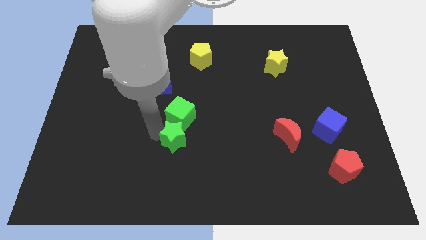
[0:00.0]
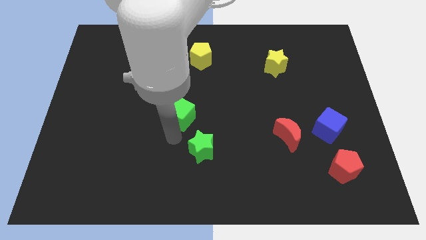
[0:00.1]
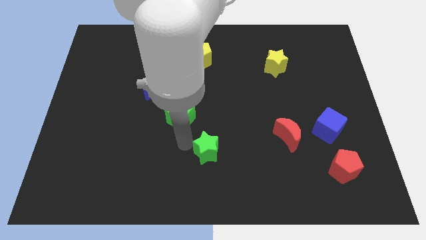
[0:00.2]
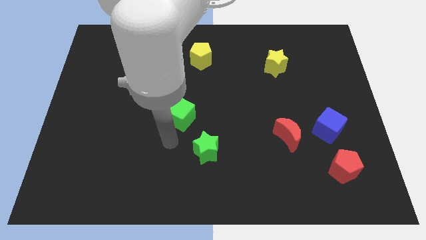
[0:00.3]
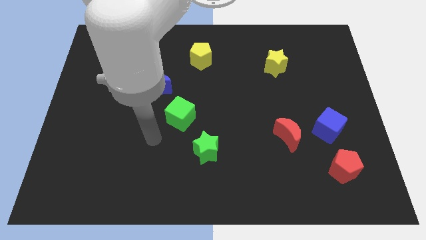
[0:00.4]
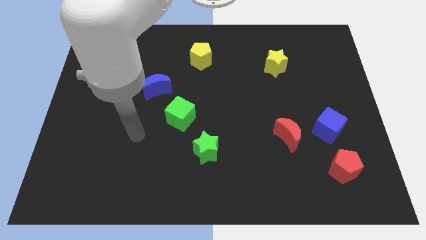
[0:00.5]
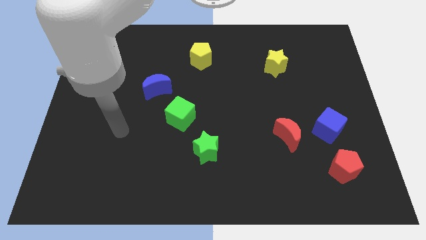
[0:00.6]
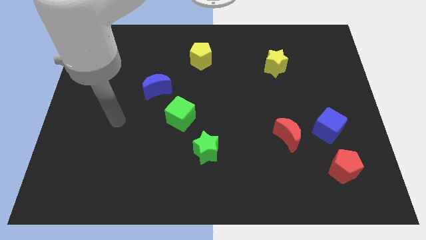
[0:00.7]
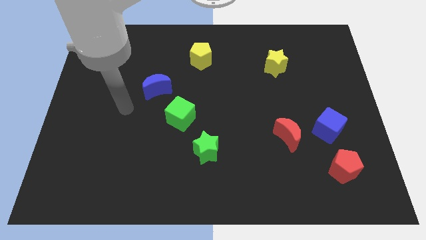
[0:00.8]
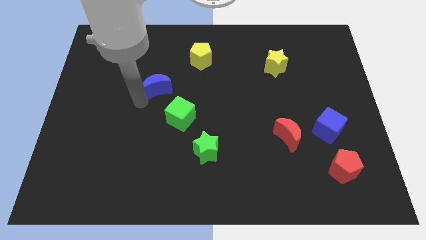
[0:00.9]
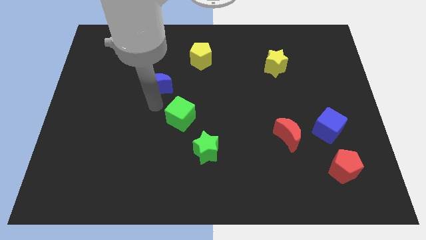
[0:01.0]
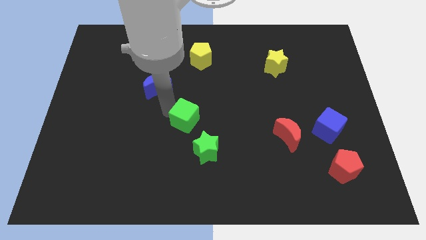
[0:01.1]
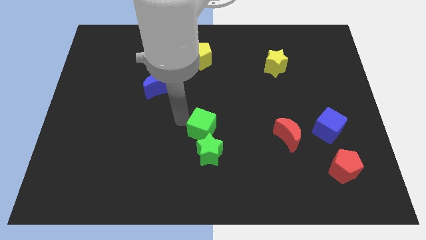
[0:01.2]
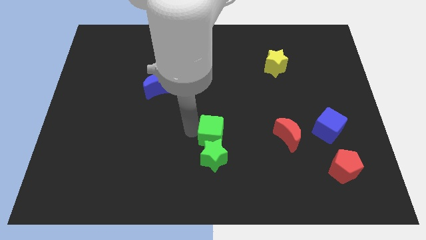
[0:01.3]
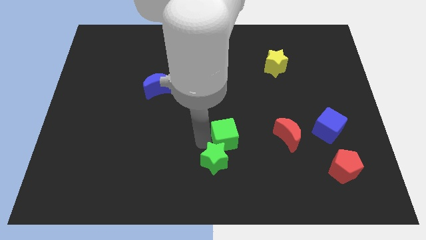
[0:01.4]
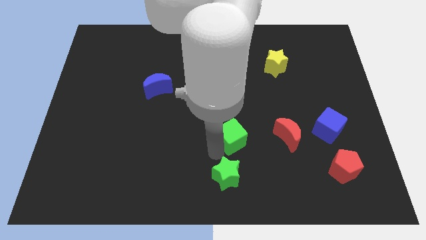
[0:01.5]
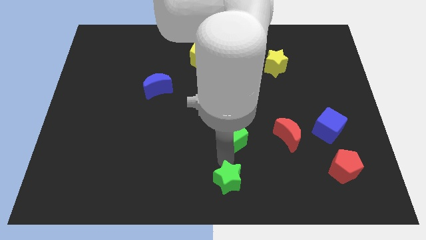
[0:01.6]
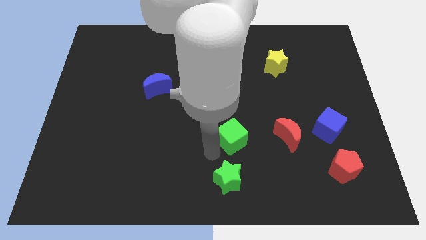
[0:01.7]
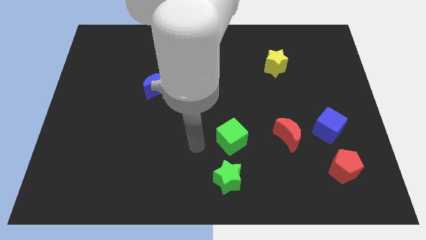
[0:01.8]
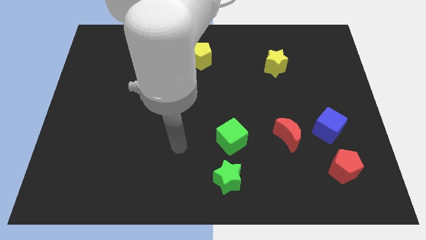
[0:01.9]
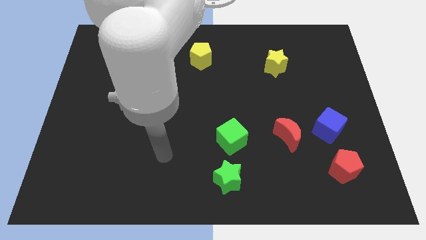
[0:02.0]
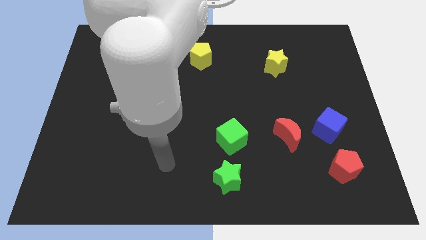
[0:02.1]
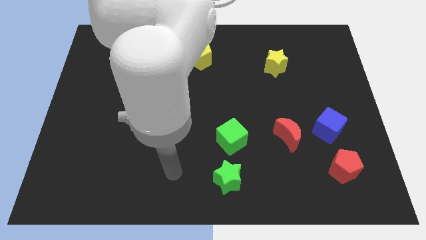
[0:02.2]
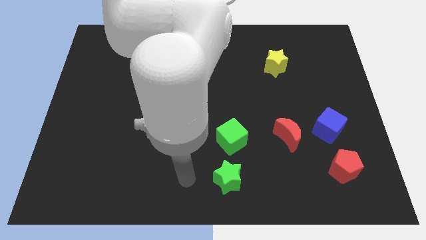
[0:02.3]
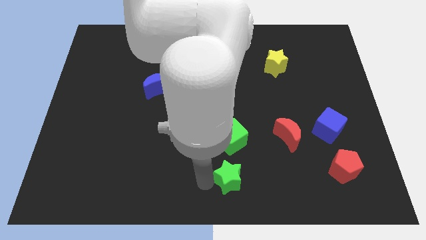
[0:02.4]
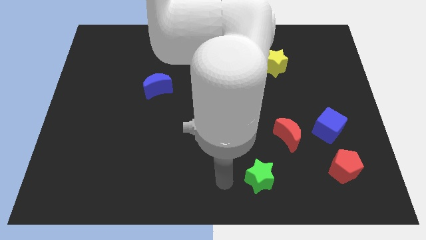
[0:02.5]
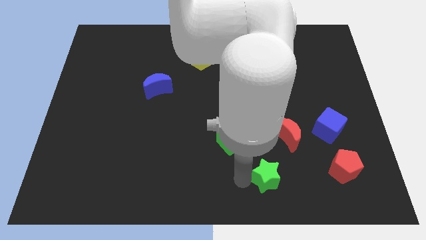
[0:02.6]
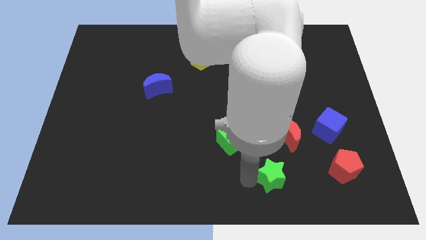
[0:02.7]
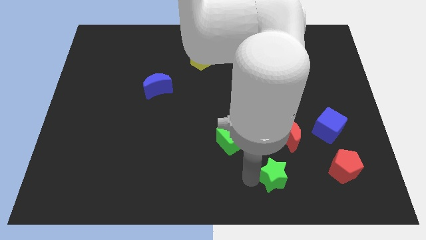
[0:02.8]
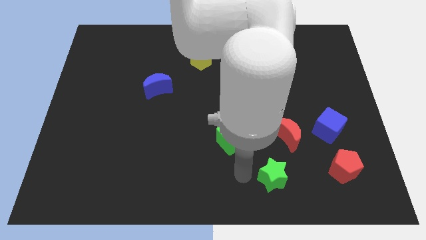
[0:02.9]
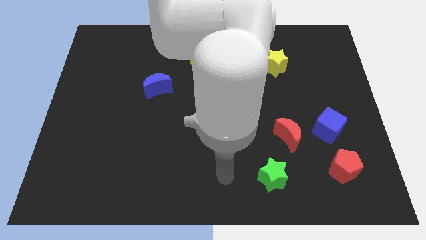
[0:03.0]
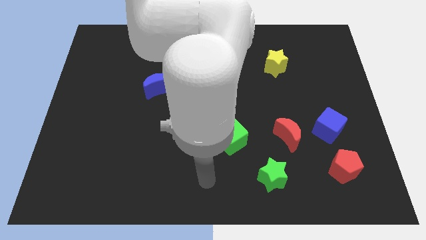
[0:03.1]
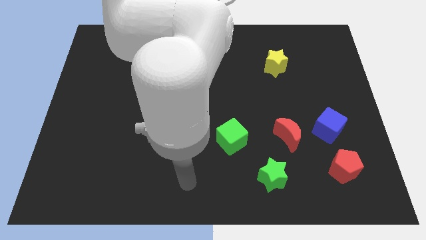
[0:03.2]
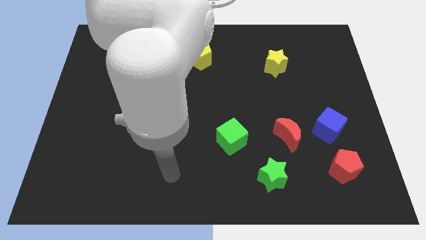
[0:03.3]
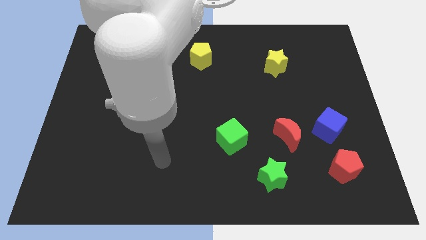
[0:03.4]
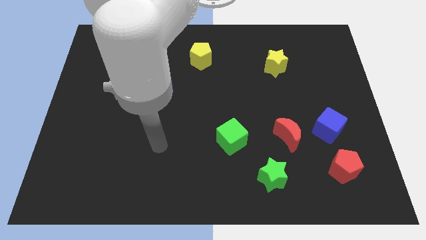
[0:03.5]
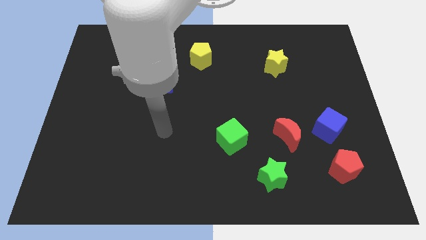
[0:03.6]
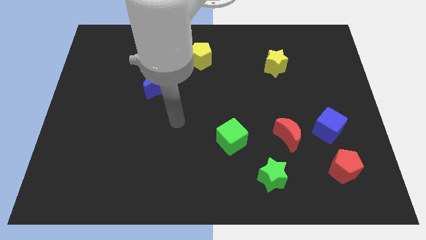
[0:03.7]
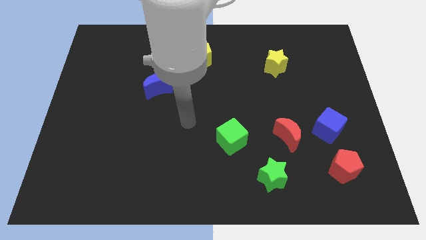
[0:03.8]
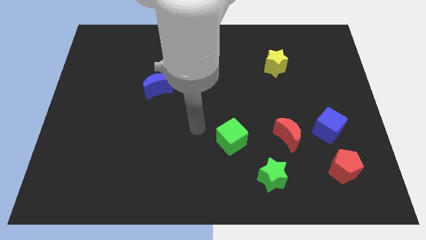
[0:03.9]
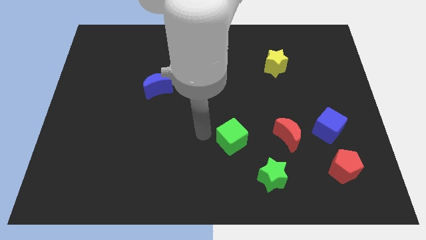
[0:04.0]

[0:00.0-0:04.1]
place the green star to the left of the red pentagon

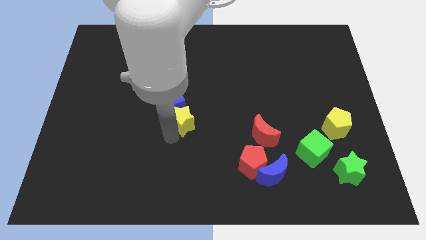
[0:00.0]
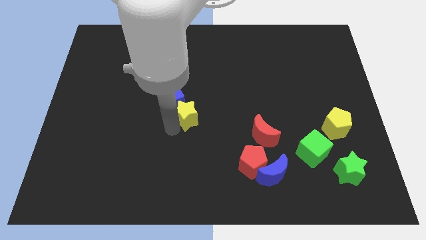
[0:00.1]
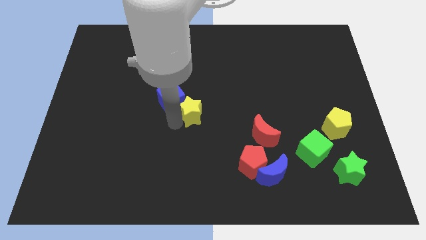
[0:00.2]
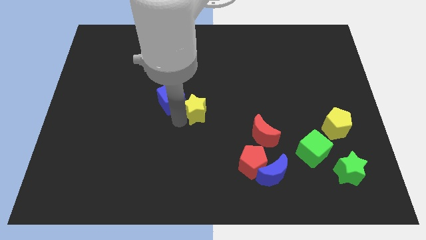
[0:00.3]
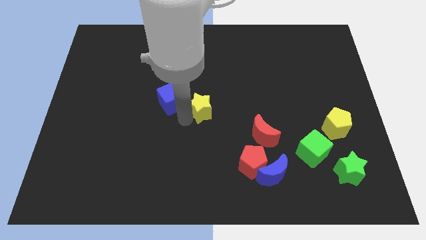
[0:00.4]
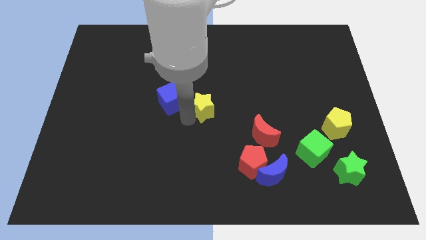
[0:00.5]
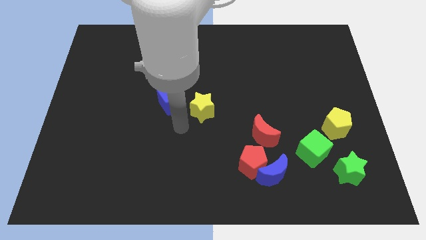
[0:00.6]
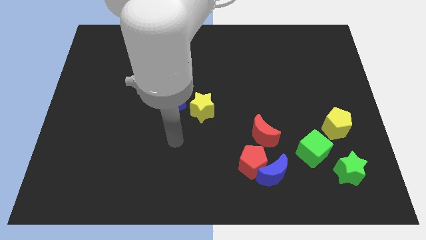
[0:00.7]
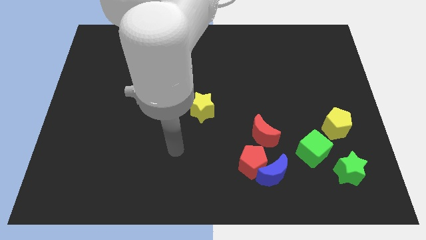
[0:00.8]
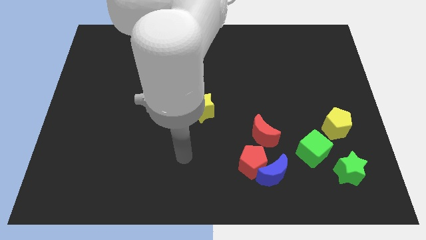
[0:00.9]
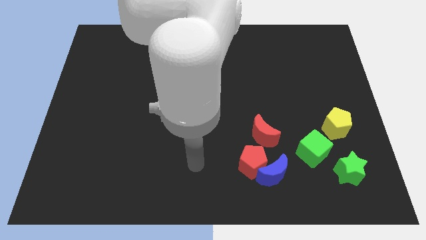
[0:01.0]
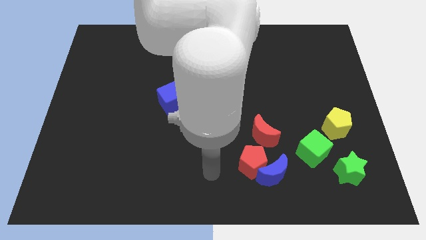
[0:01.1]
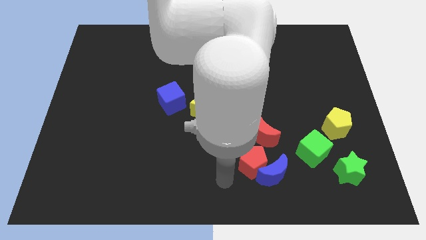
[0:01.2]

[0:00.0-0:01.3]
move yellow star to center of the board

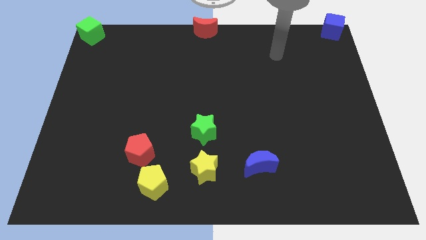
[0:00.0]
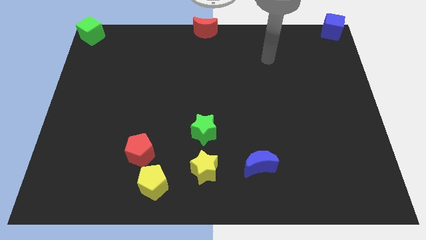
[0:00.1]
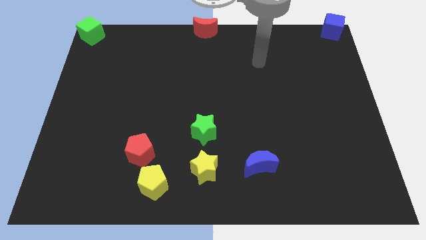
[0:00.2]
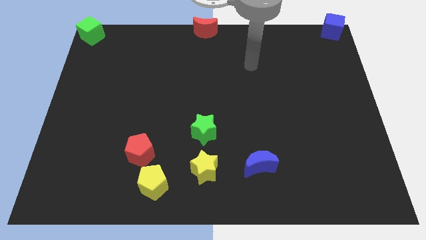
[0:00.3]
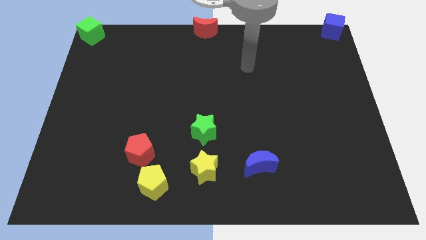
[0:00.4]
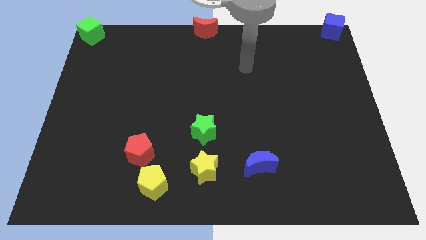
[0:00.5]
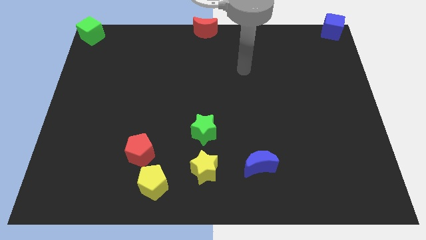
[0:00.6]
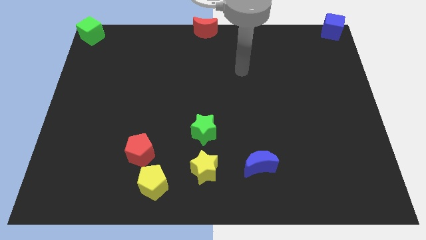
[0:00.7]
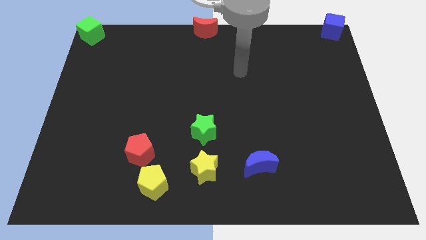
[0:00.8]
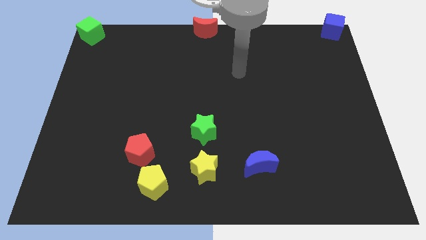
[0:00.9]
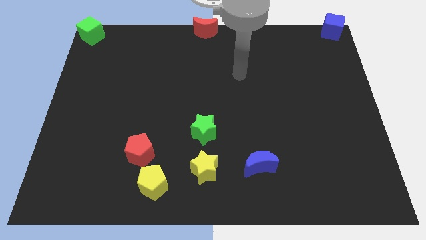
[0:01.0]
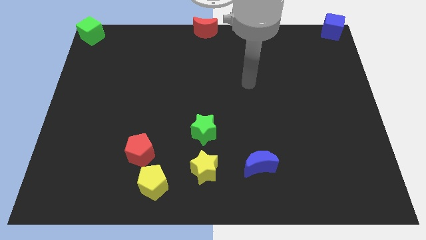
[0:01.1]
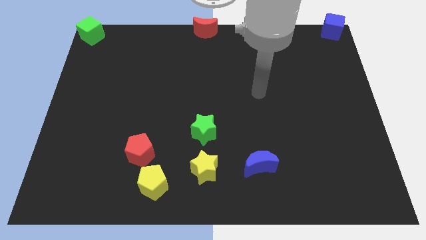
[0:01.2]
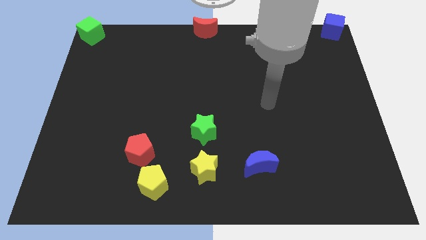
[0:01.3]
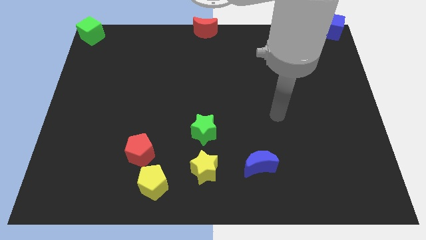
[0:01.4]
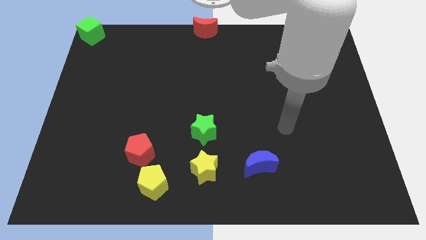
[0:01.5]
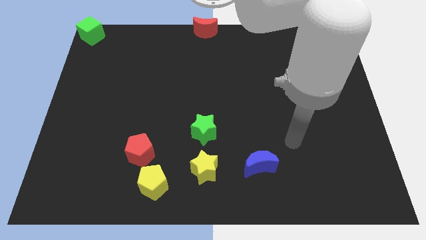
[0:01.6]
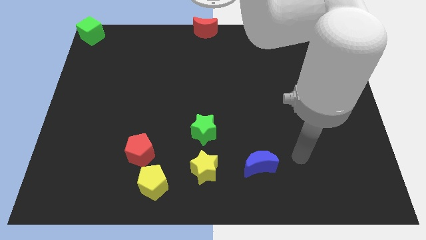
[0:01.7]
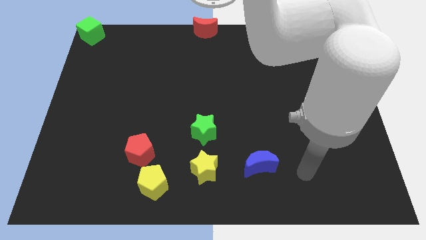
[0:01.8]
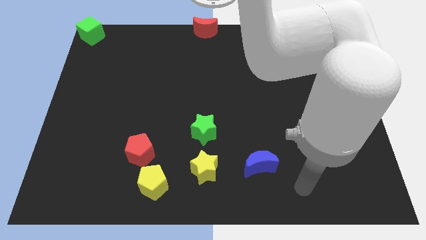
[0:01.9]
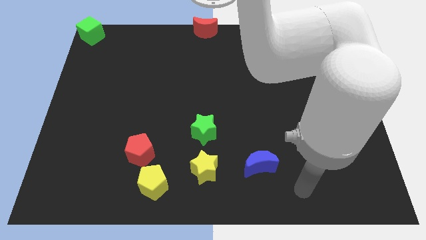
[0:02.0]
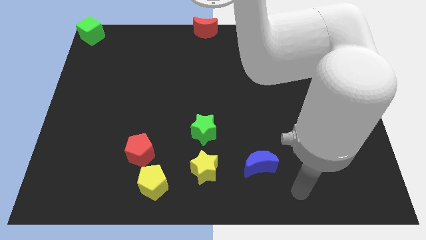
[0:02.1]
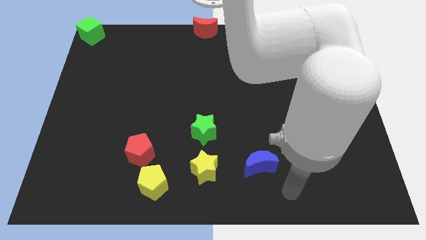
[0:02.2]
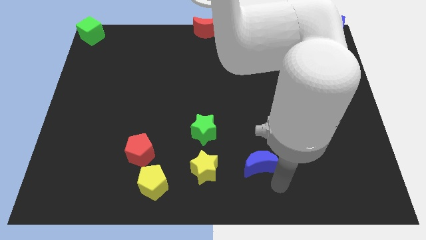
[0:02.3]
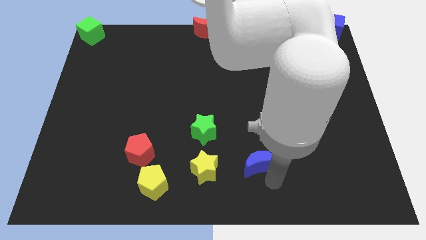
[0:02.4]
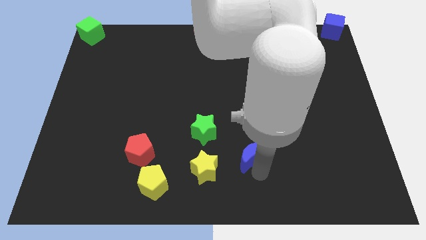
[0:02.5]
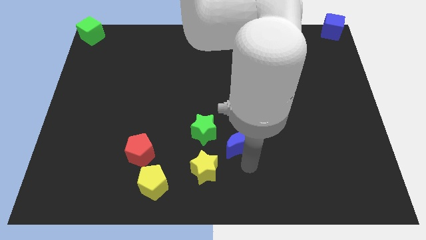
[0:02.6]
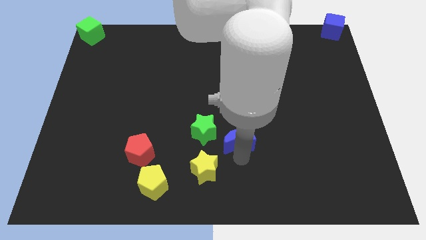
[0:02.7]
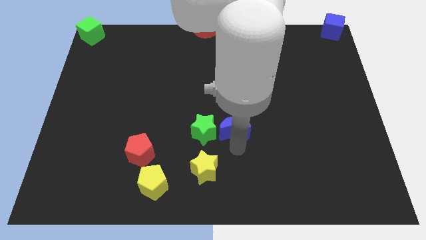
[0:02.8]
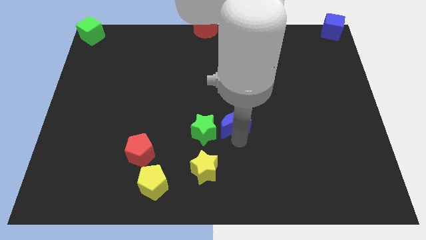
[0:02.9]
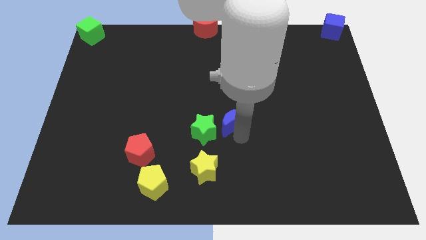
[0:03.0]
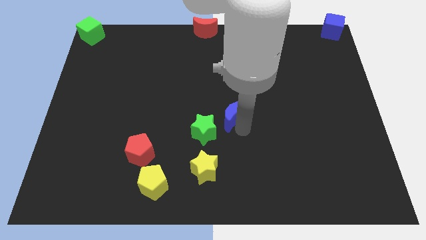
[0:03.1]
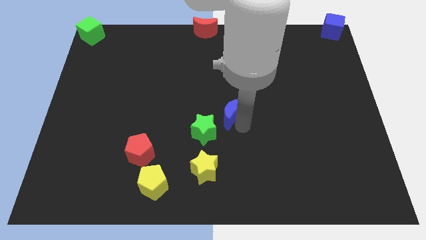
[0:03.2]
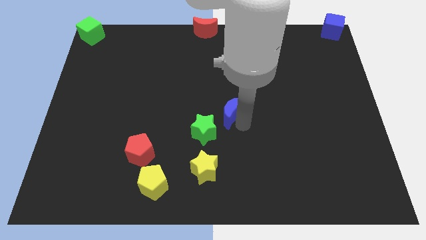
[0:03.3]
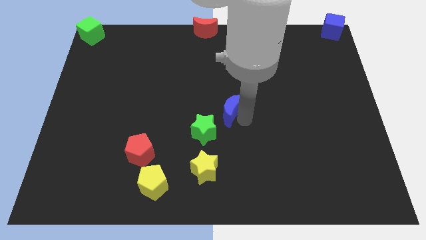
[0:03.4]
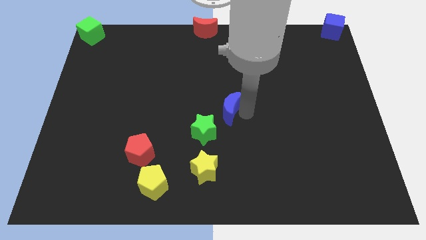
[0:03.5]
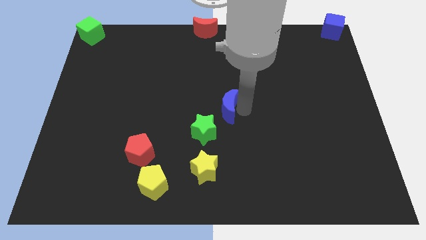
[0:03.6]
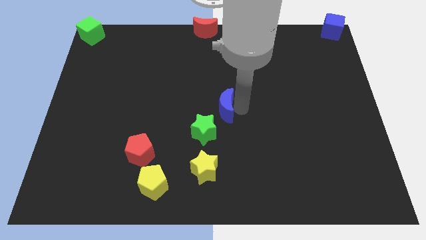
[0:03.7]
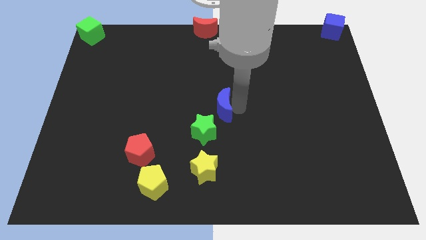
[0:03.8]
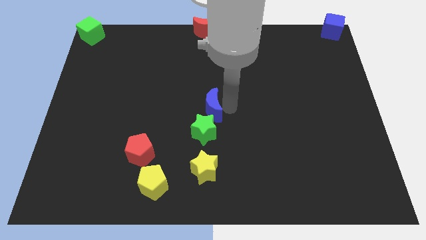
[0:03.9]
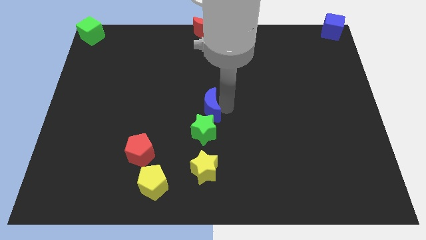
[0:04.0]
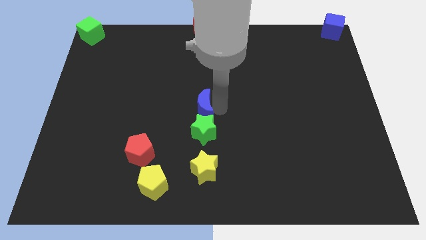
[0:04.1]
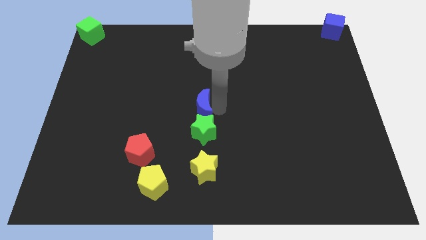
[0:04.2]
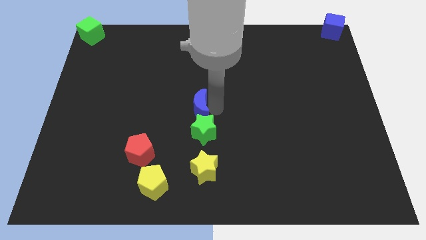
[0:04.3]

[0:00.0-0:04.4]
move the blue moon vertically above the green star
